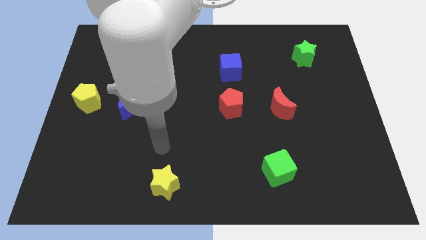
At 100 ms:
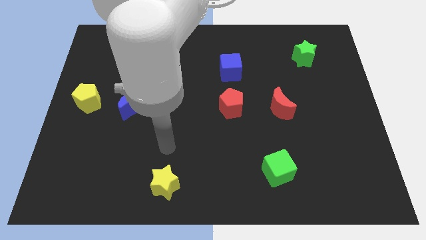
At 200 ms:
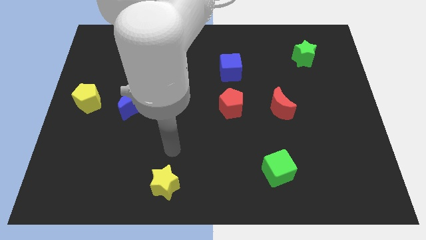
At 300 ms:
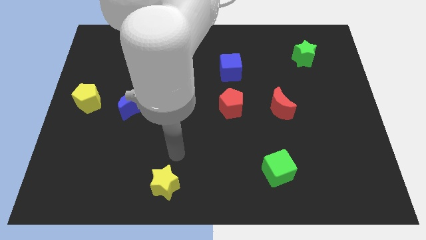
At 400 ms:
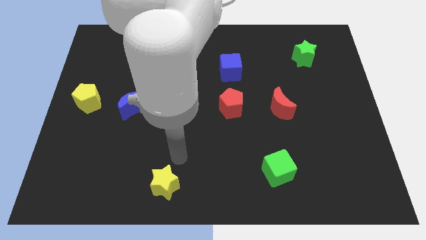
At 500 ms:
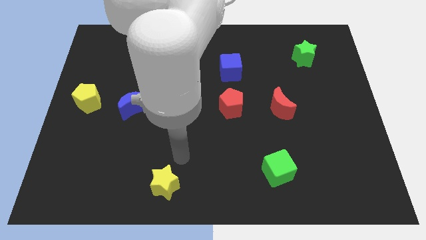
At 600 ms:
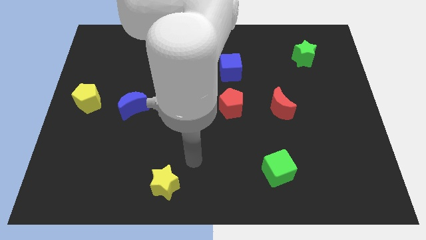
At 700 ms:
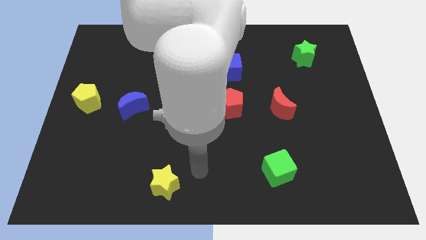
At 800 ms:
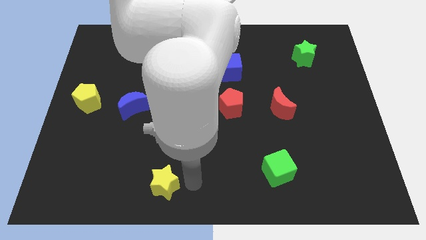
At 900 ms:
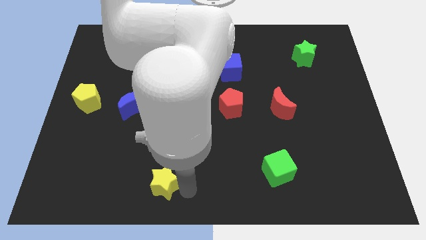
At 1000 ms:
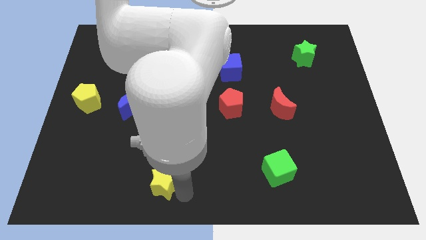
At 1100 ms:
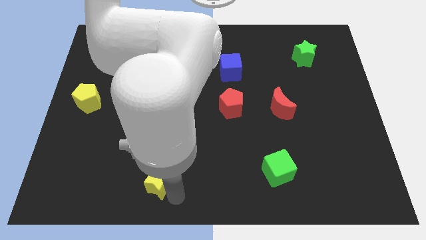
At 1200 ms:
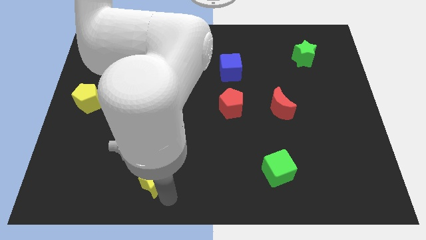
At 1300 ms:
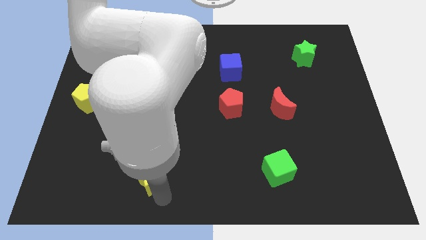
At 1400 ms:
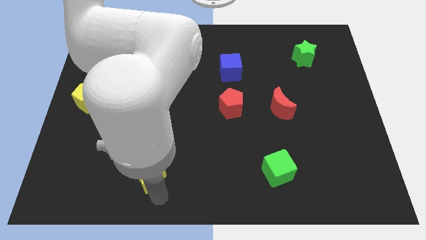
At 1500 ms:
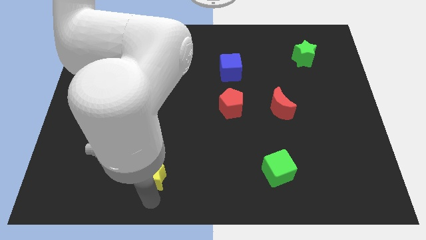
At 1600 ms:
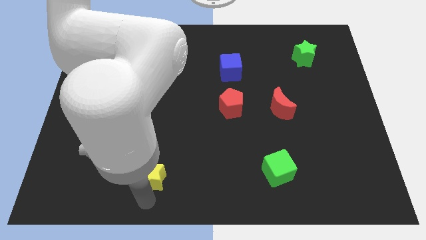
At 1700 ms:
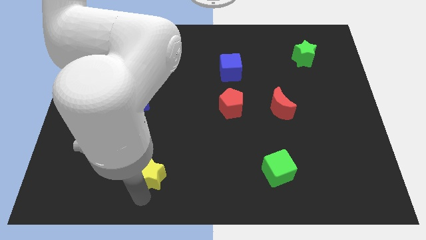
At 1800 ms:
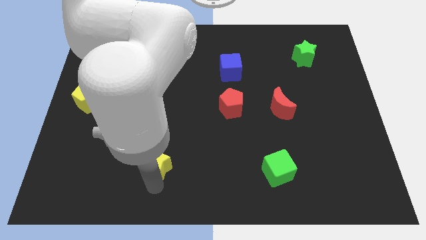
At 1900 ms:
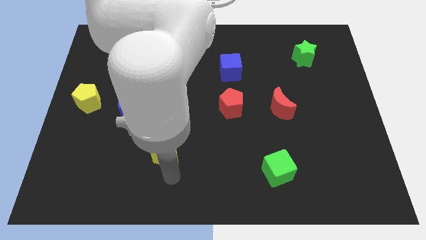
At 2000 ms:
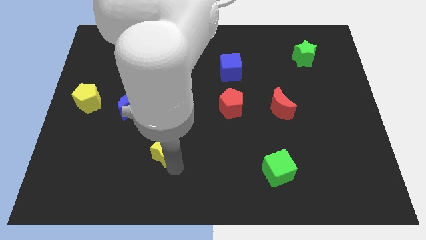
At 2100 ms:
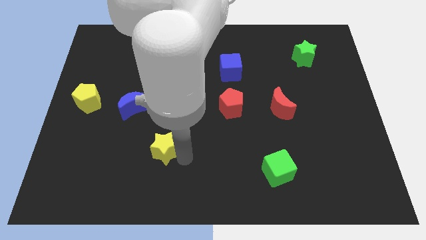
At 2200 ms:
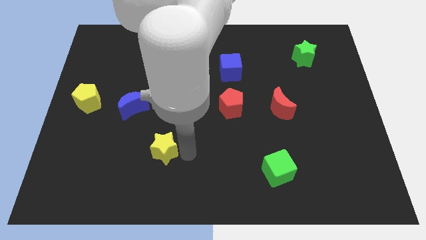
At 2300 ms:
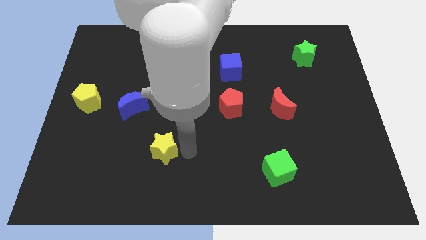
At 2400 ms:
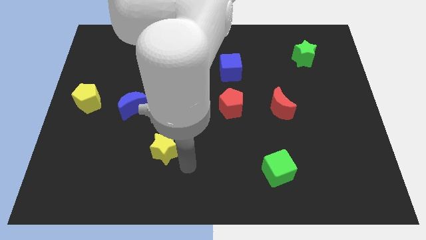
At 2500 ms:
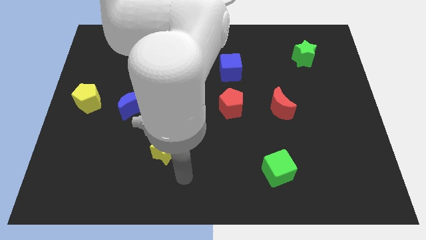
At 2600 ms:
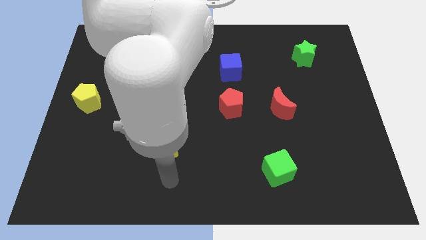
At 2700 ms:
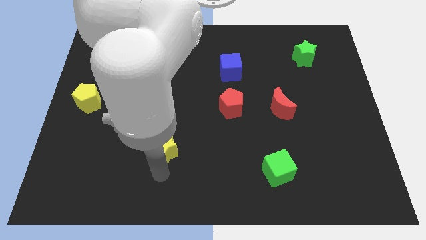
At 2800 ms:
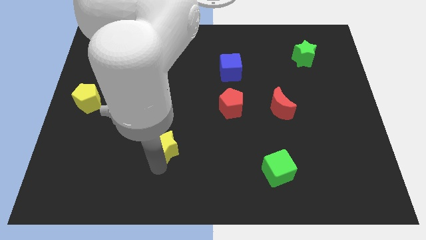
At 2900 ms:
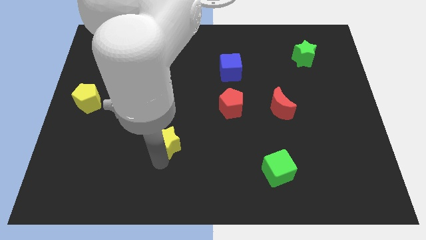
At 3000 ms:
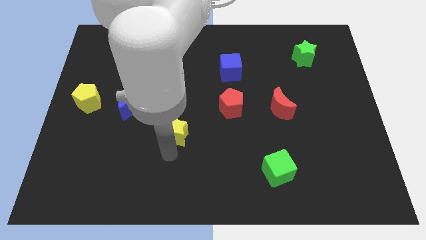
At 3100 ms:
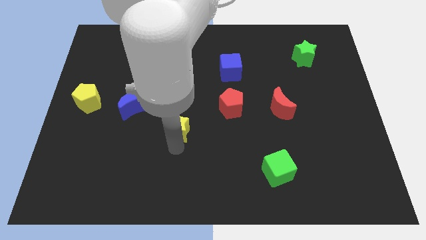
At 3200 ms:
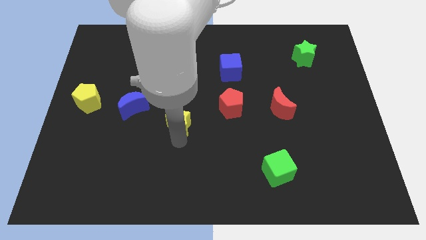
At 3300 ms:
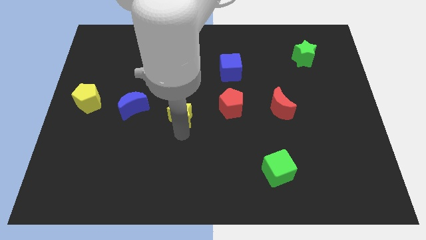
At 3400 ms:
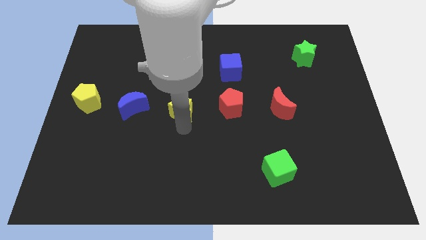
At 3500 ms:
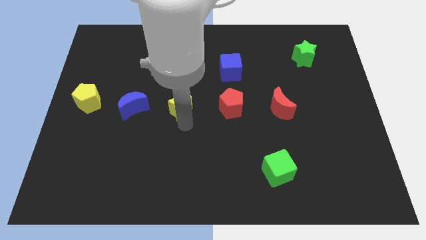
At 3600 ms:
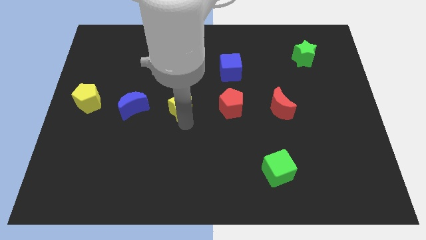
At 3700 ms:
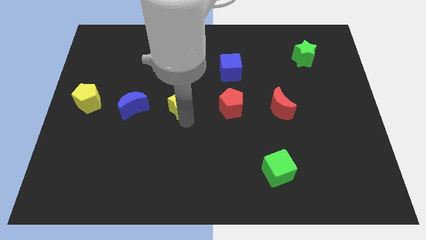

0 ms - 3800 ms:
move the yellow star upwards

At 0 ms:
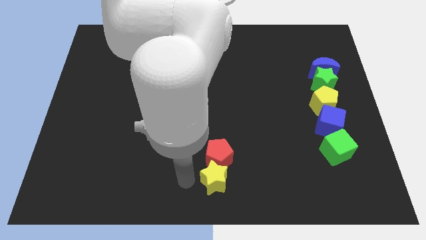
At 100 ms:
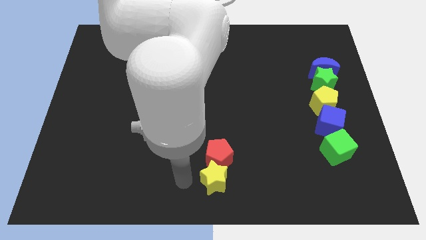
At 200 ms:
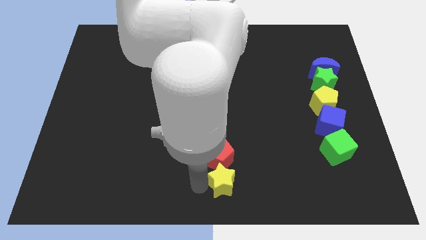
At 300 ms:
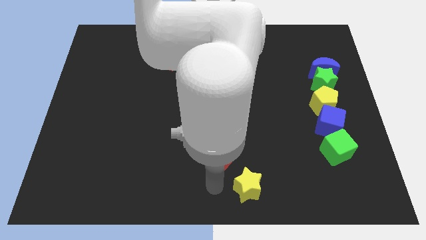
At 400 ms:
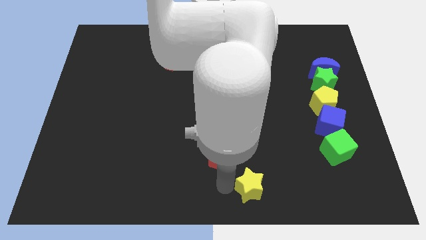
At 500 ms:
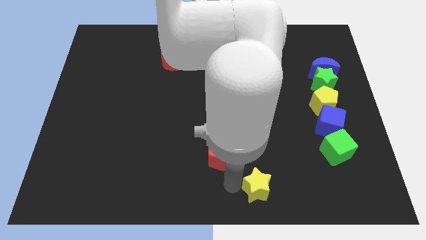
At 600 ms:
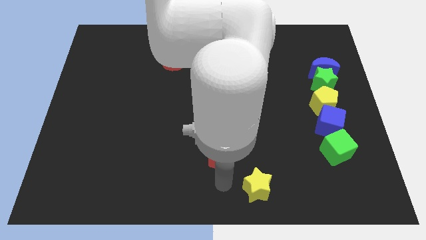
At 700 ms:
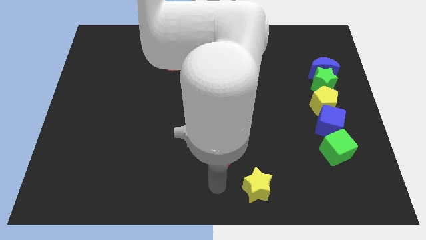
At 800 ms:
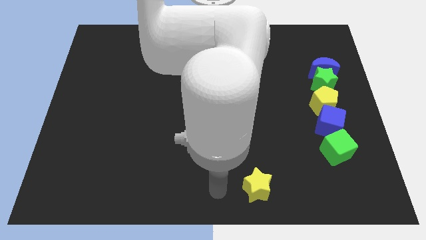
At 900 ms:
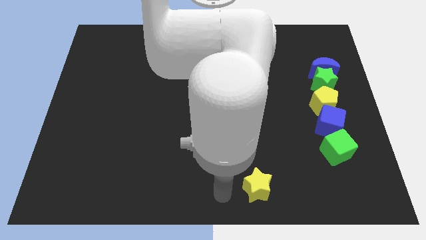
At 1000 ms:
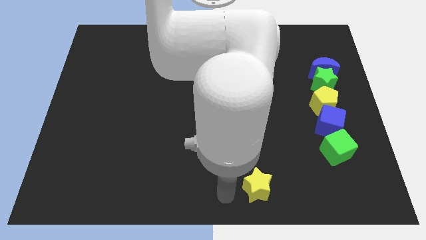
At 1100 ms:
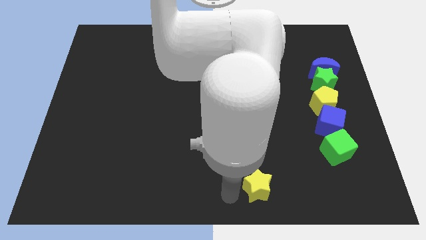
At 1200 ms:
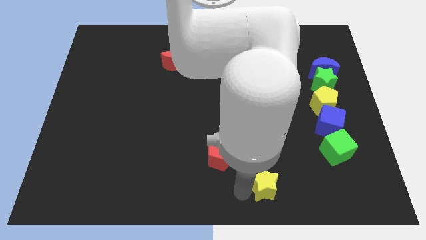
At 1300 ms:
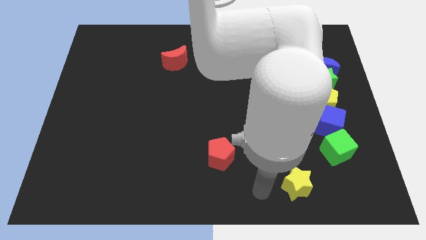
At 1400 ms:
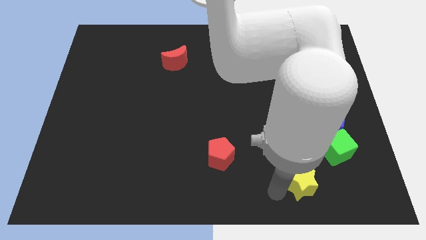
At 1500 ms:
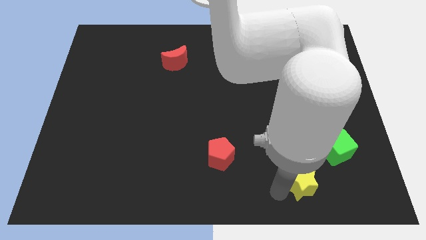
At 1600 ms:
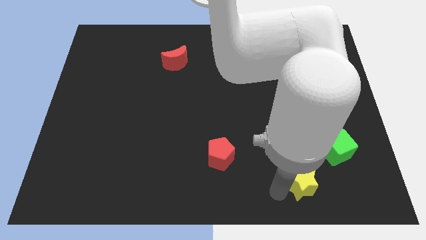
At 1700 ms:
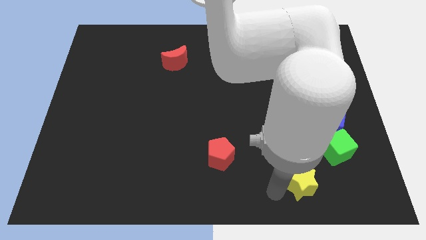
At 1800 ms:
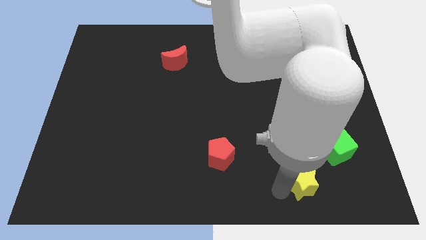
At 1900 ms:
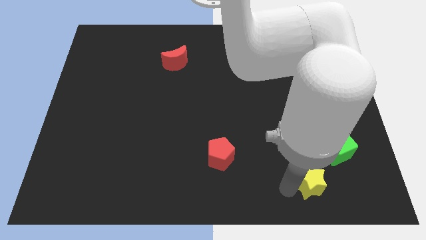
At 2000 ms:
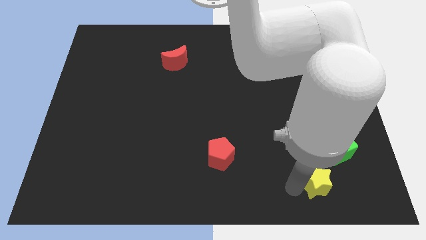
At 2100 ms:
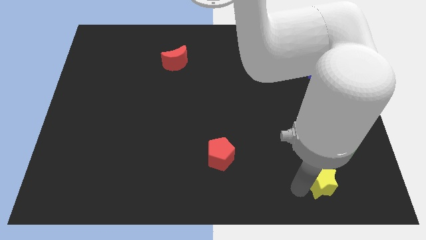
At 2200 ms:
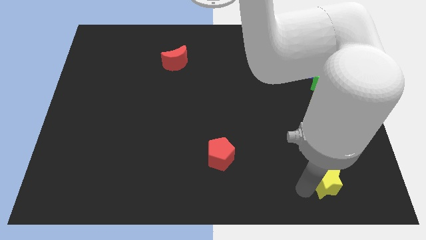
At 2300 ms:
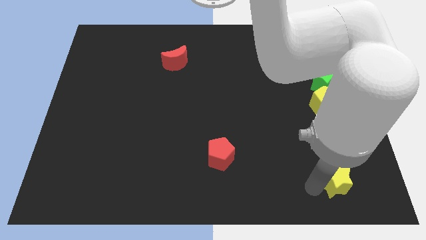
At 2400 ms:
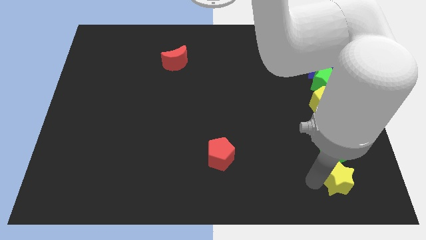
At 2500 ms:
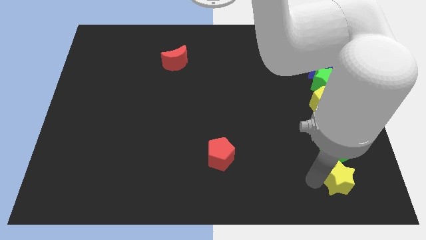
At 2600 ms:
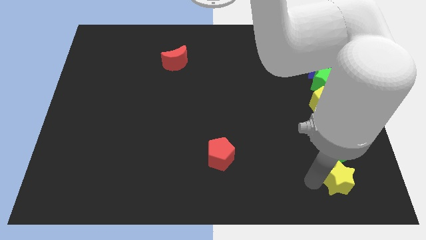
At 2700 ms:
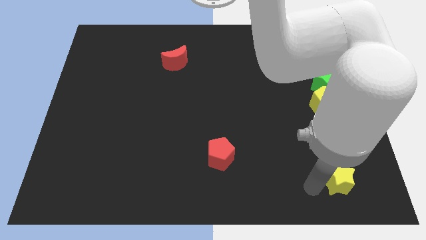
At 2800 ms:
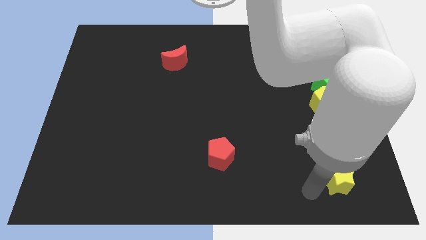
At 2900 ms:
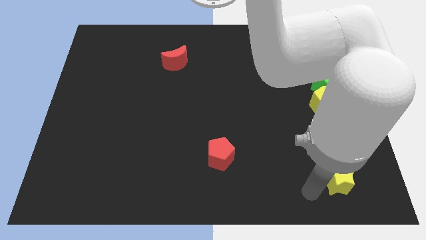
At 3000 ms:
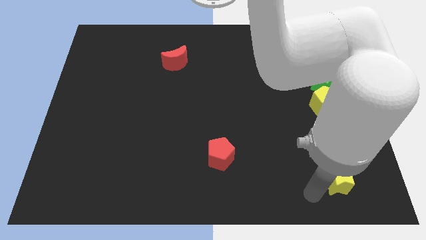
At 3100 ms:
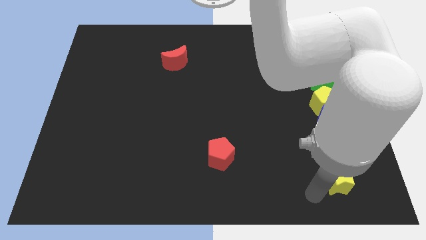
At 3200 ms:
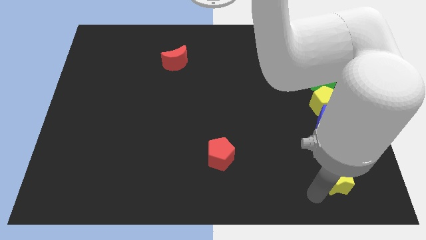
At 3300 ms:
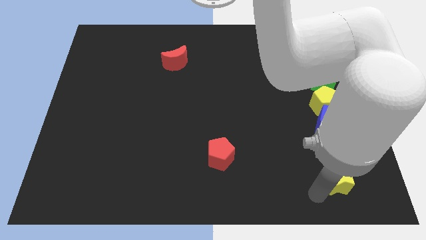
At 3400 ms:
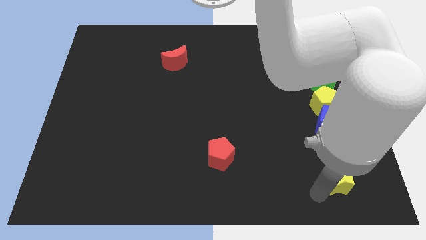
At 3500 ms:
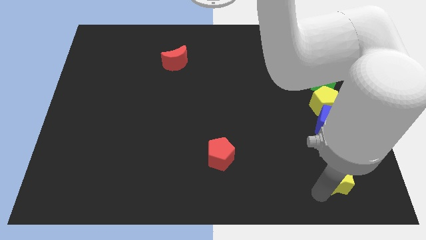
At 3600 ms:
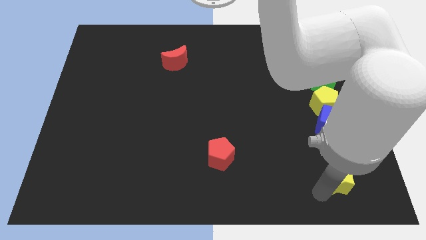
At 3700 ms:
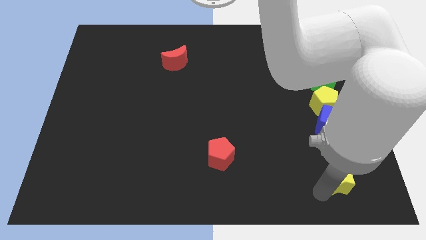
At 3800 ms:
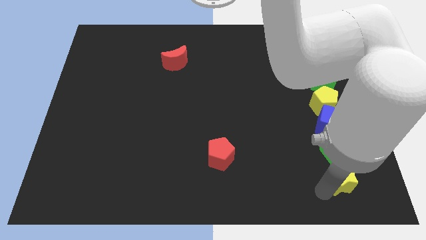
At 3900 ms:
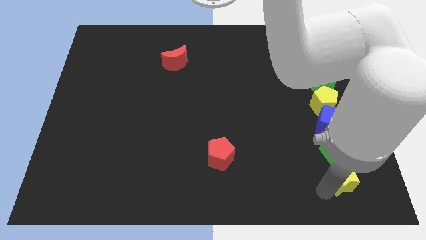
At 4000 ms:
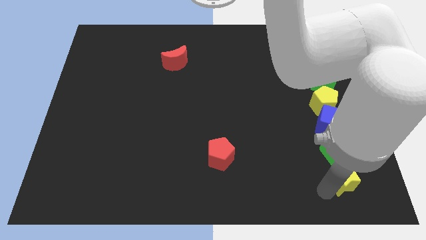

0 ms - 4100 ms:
place the yellow star below the green cube

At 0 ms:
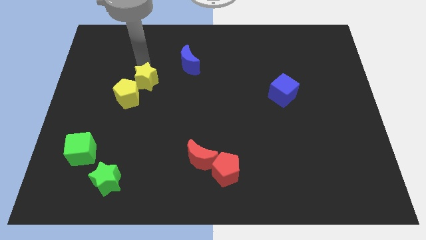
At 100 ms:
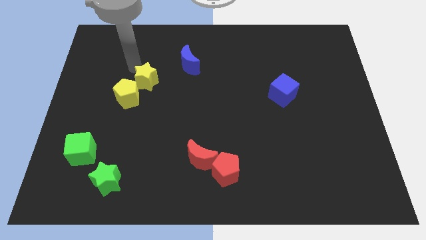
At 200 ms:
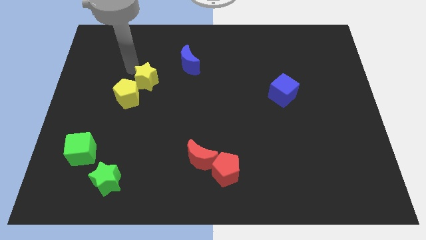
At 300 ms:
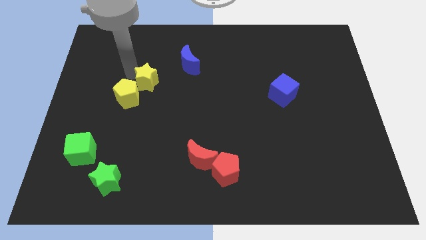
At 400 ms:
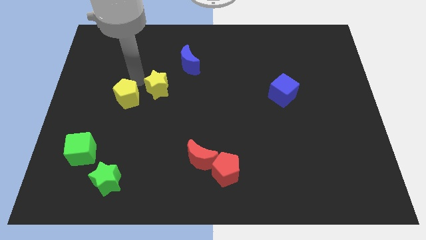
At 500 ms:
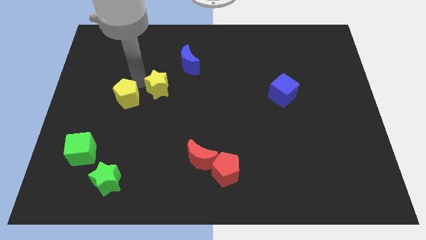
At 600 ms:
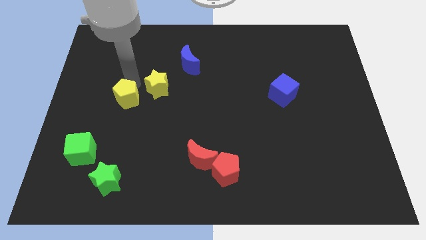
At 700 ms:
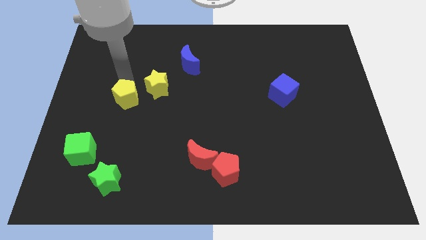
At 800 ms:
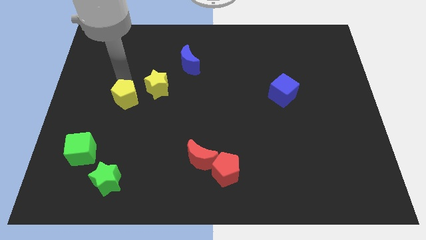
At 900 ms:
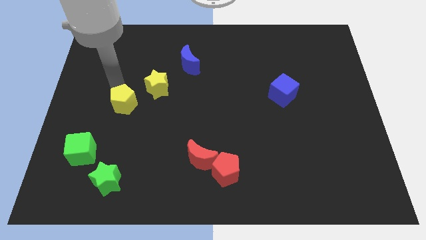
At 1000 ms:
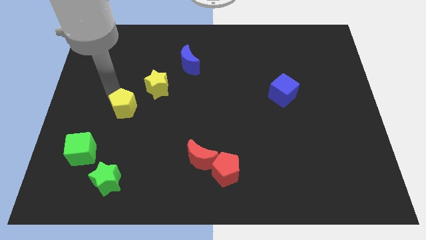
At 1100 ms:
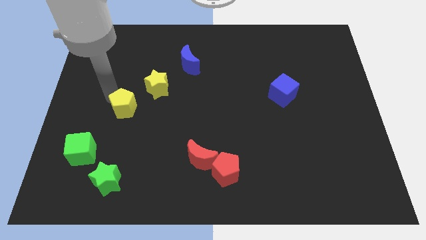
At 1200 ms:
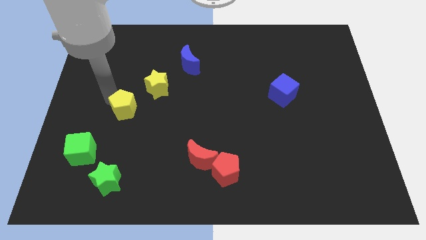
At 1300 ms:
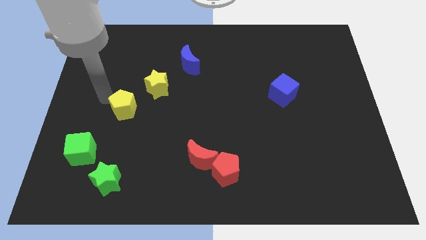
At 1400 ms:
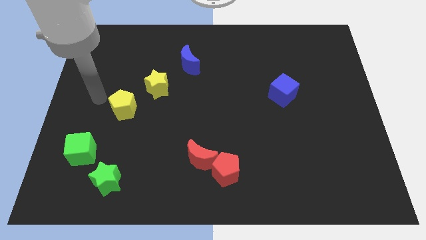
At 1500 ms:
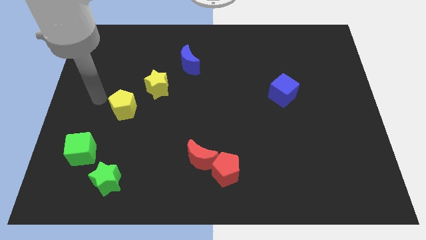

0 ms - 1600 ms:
drag the yellow star and the yellow pentagon away from each other
